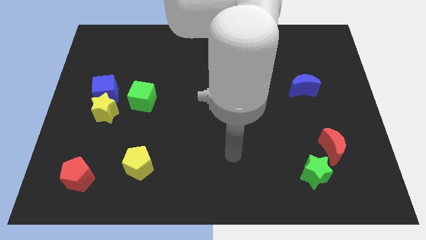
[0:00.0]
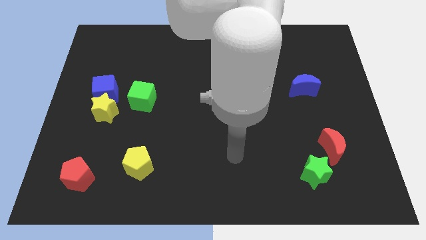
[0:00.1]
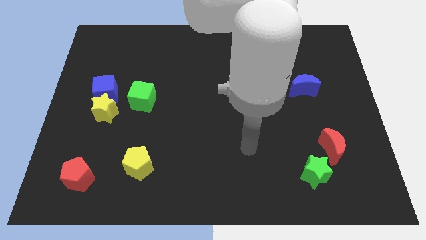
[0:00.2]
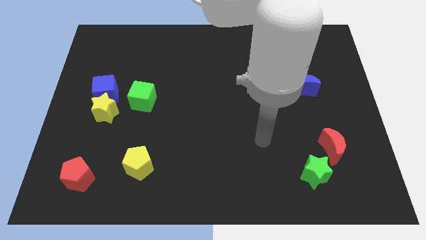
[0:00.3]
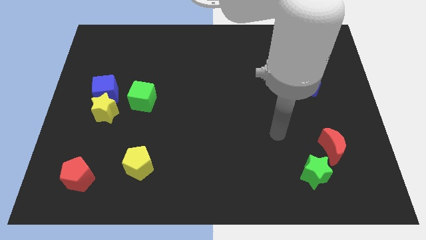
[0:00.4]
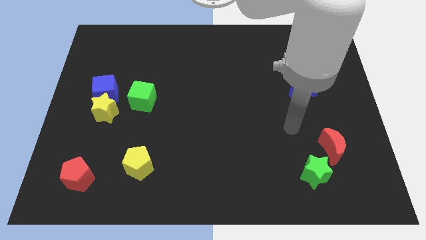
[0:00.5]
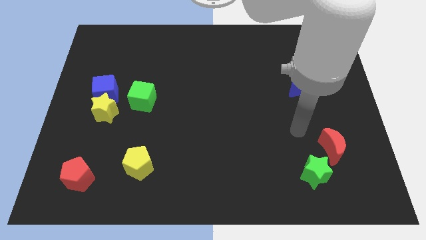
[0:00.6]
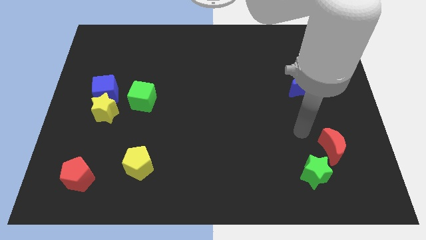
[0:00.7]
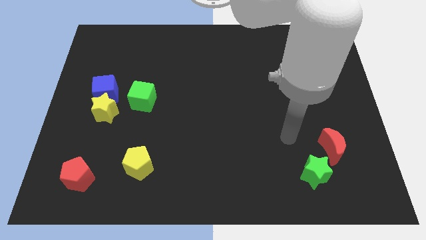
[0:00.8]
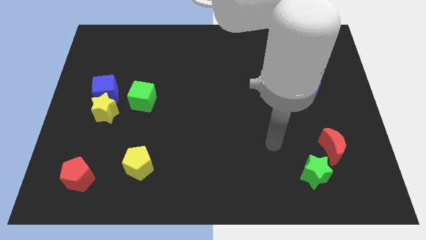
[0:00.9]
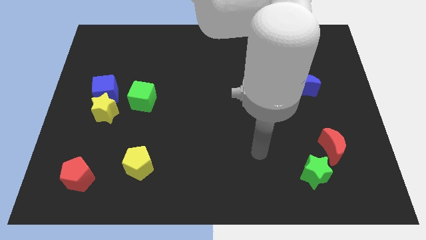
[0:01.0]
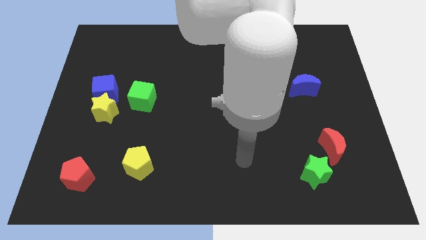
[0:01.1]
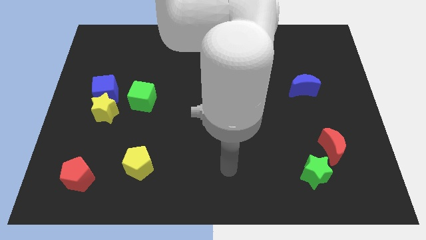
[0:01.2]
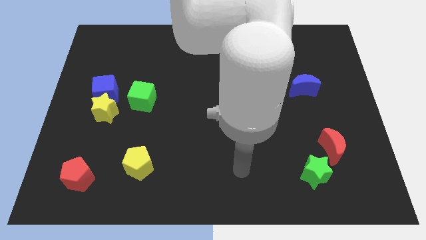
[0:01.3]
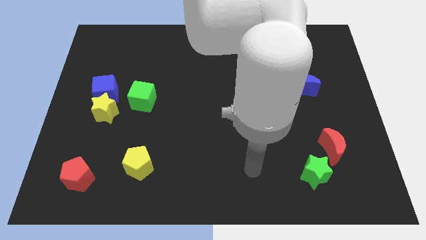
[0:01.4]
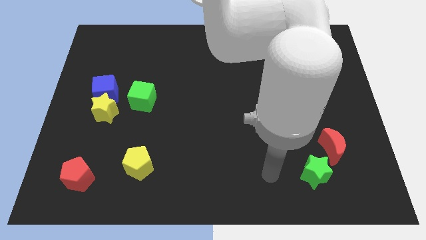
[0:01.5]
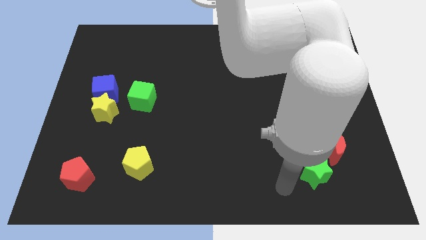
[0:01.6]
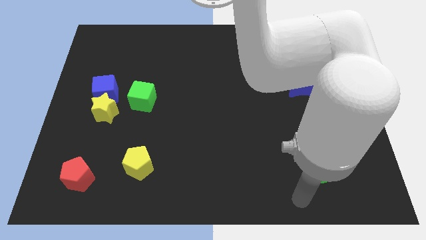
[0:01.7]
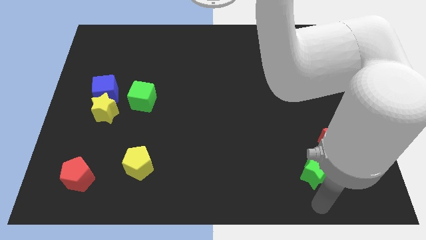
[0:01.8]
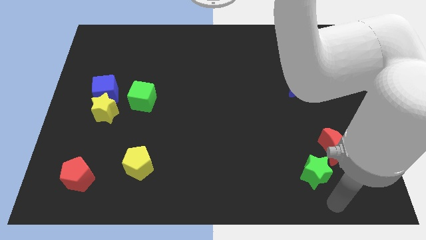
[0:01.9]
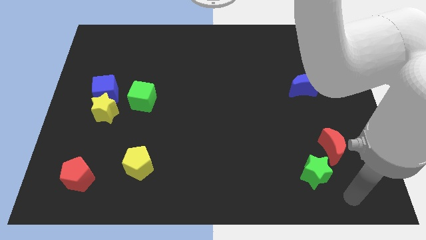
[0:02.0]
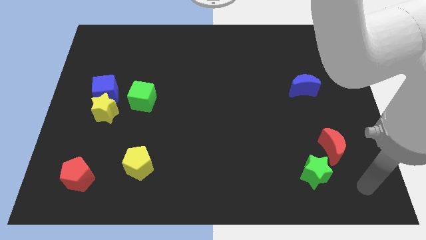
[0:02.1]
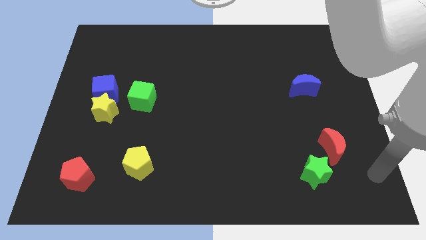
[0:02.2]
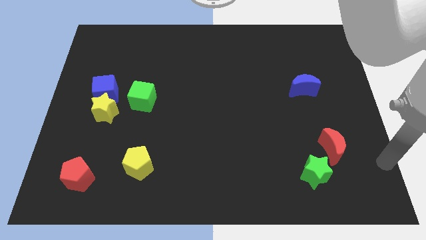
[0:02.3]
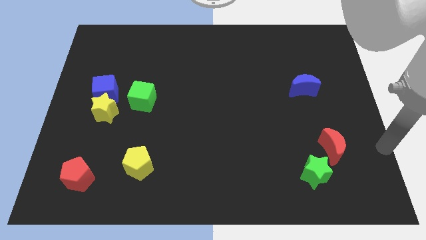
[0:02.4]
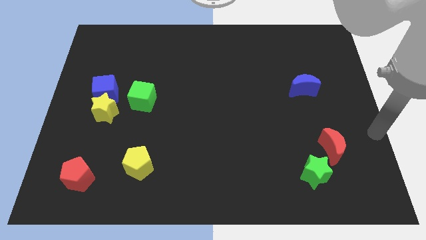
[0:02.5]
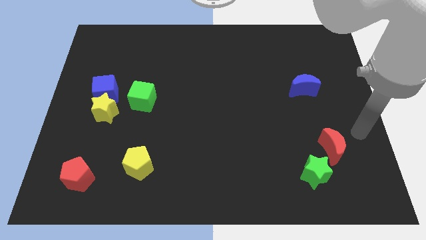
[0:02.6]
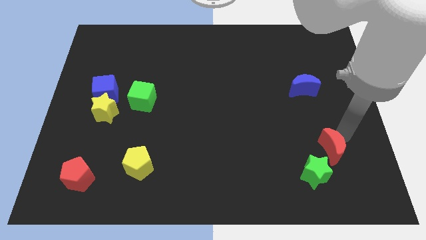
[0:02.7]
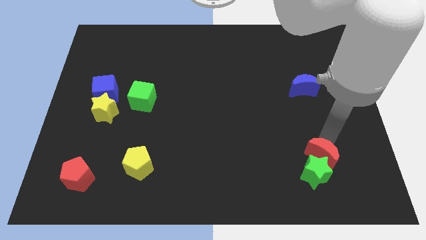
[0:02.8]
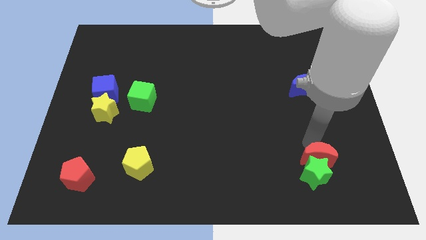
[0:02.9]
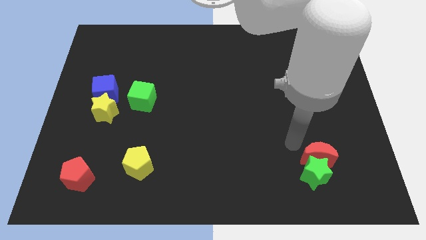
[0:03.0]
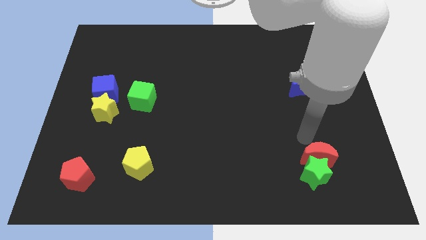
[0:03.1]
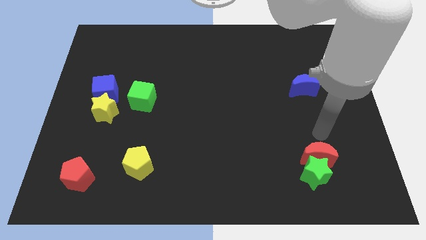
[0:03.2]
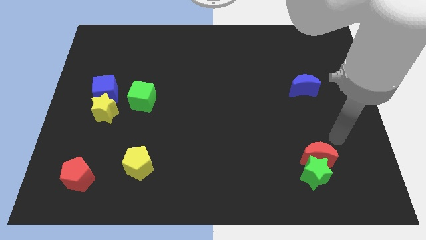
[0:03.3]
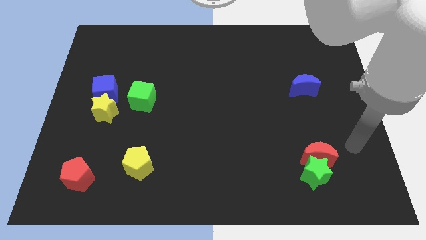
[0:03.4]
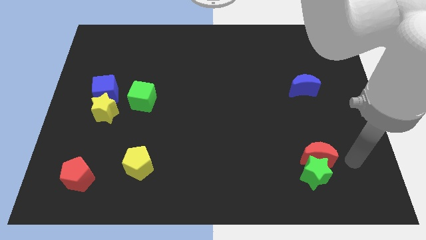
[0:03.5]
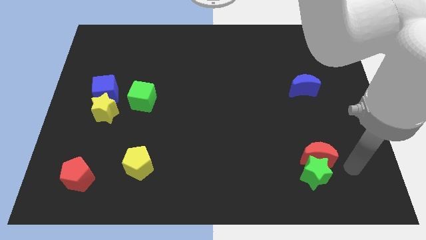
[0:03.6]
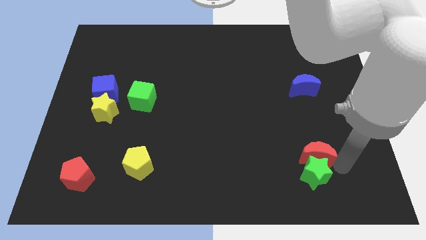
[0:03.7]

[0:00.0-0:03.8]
push the red crescent close to the green star

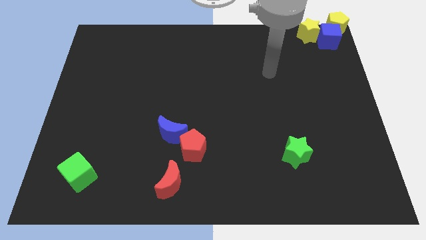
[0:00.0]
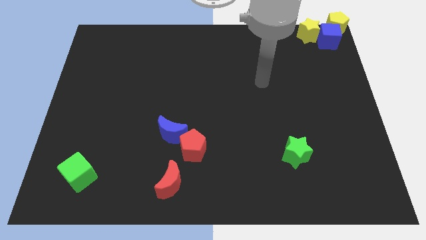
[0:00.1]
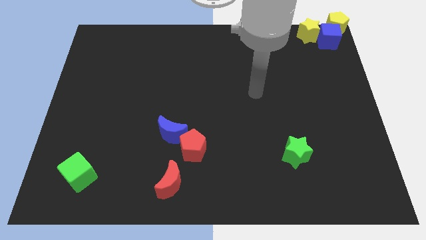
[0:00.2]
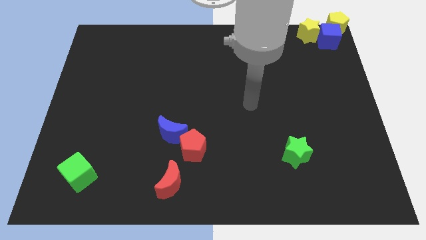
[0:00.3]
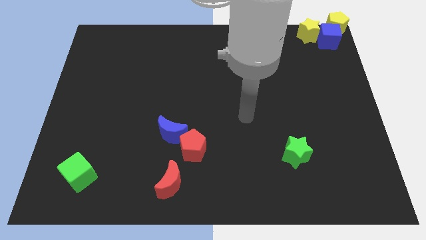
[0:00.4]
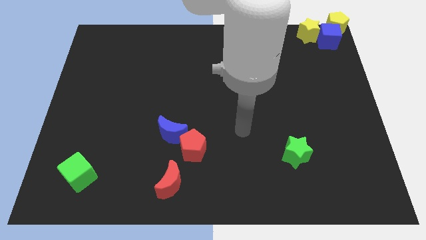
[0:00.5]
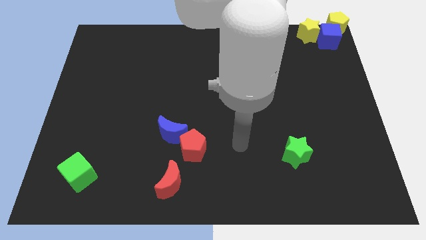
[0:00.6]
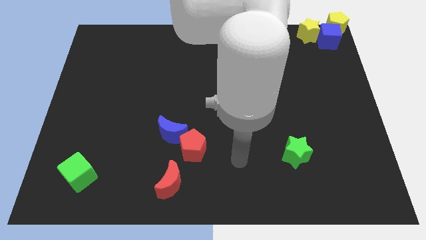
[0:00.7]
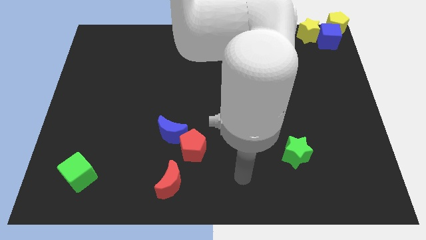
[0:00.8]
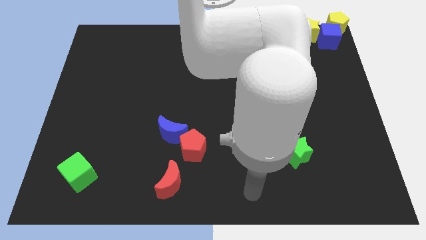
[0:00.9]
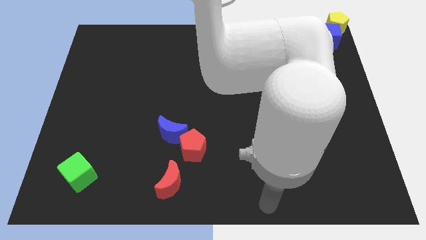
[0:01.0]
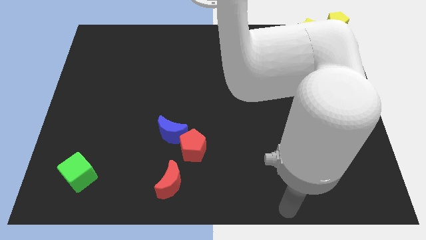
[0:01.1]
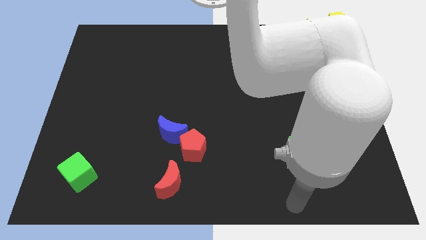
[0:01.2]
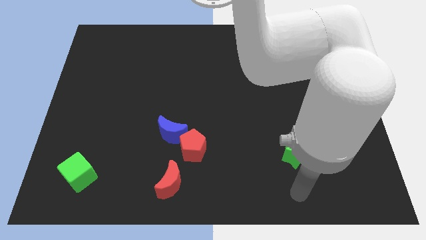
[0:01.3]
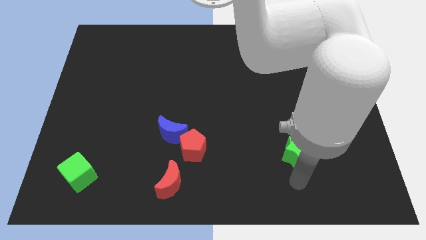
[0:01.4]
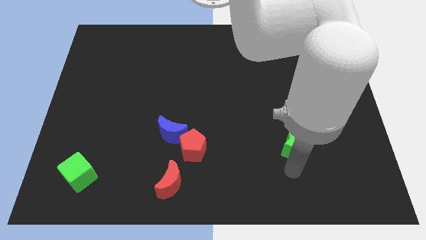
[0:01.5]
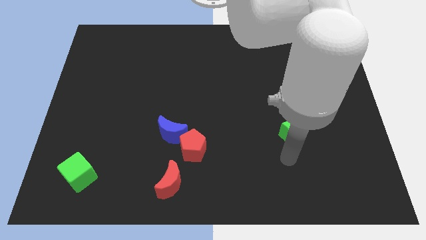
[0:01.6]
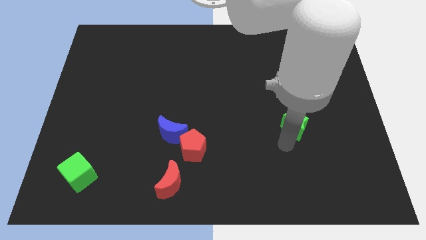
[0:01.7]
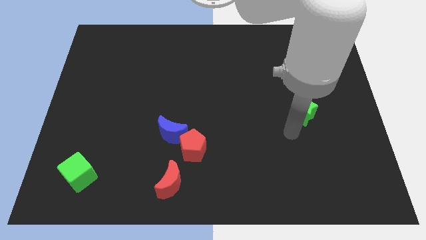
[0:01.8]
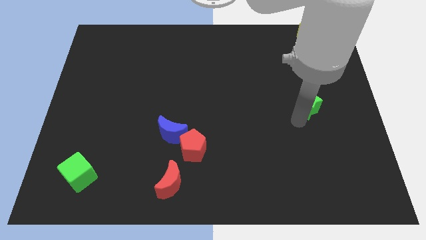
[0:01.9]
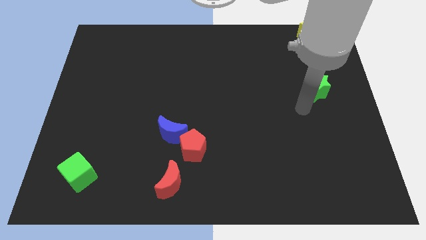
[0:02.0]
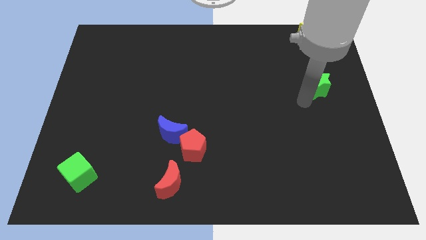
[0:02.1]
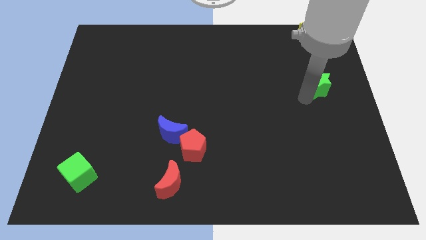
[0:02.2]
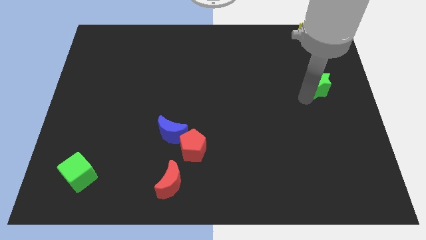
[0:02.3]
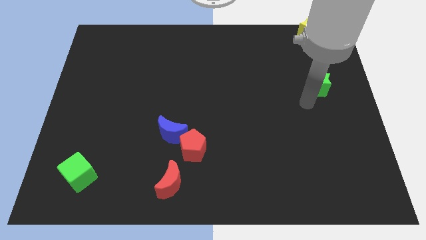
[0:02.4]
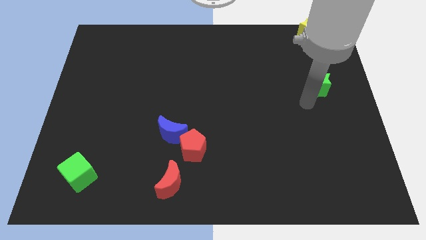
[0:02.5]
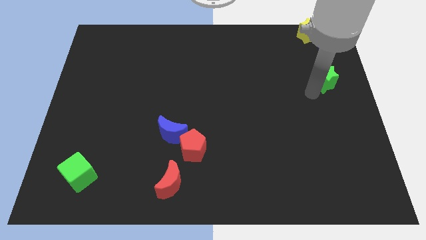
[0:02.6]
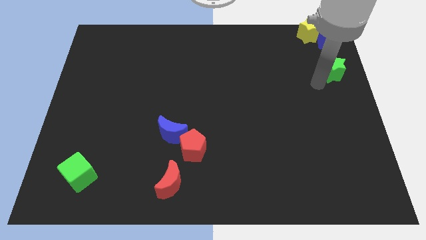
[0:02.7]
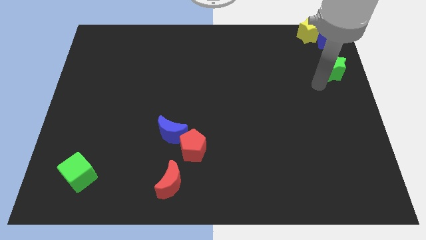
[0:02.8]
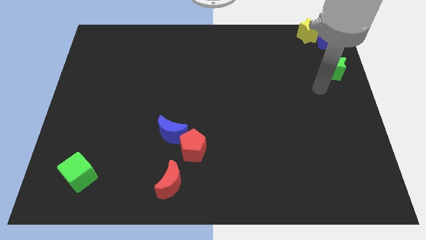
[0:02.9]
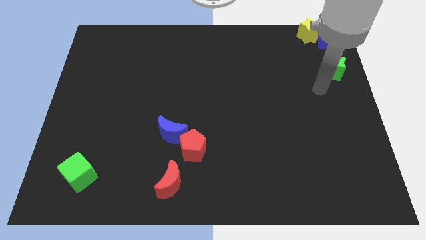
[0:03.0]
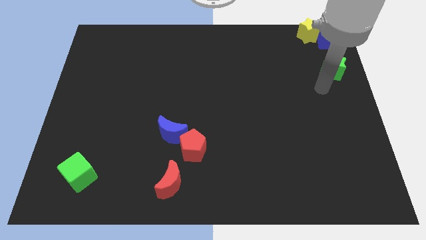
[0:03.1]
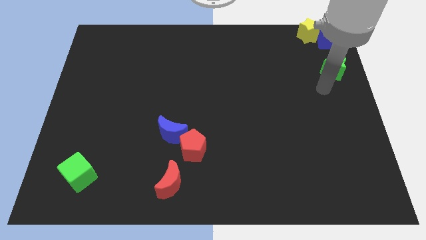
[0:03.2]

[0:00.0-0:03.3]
place green star vertically below blue cube

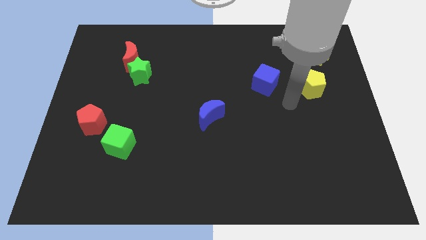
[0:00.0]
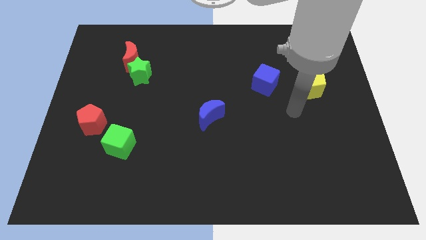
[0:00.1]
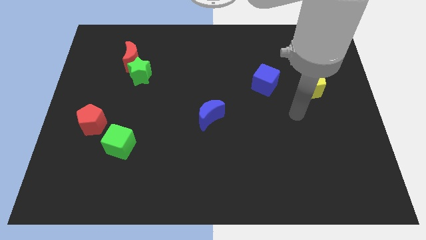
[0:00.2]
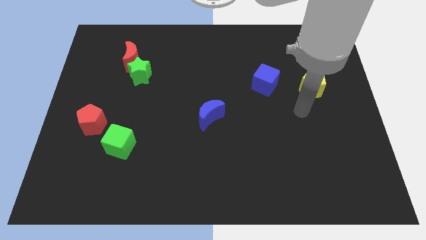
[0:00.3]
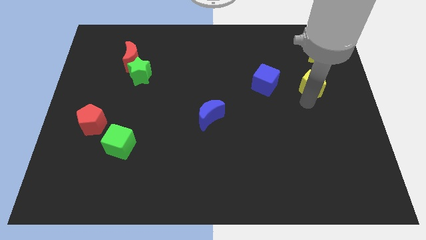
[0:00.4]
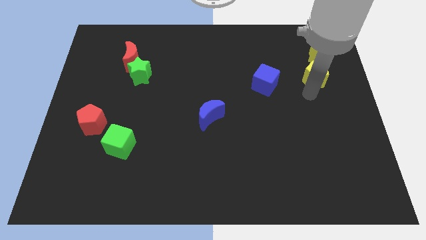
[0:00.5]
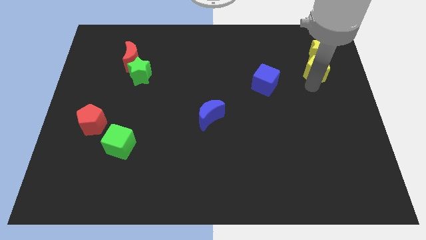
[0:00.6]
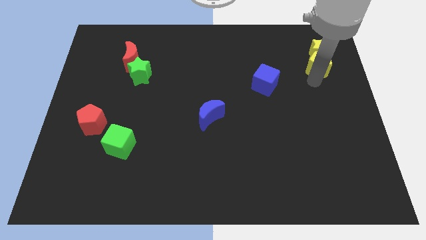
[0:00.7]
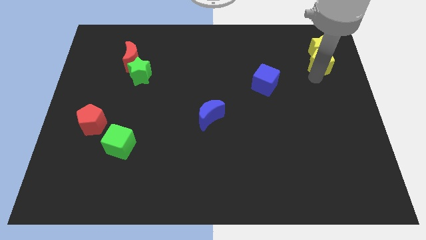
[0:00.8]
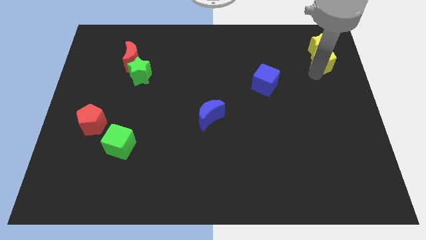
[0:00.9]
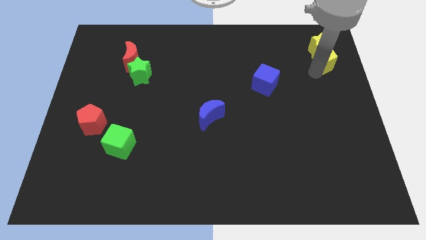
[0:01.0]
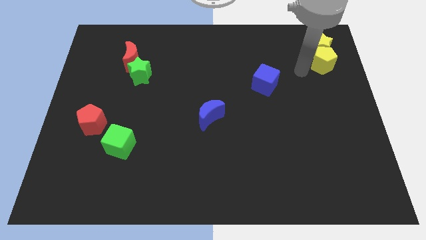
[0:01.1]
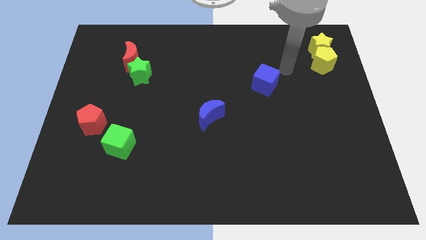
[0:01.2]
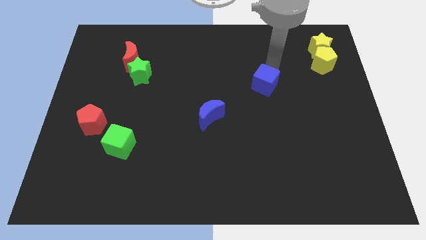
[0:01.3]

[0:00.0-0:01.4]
push yellow pentagon to the top right corner of the board

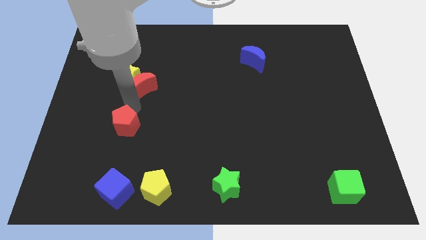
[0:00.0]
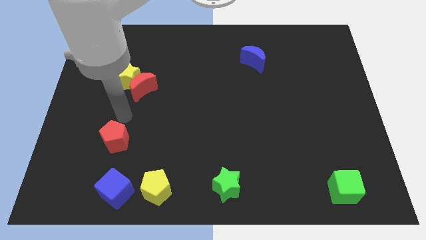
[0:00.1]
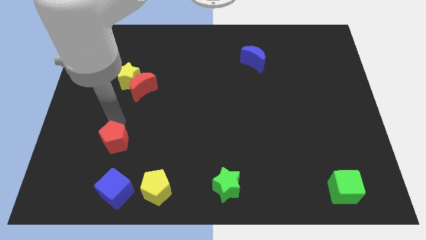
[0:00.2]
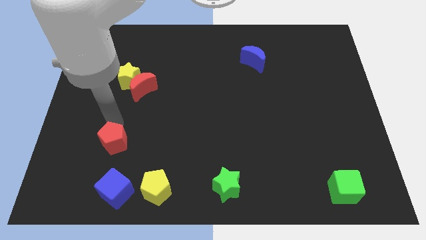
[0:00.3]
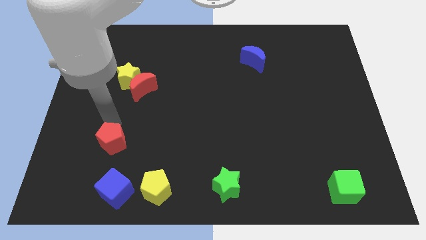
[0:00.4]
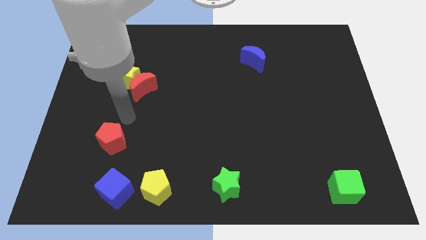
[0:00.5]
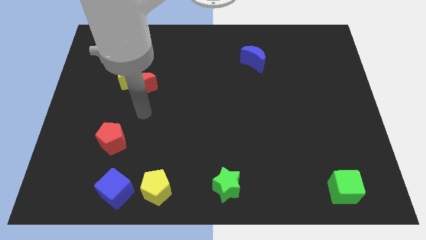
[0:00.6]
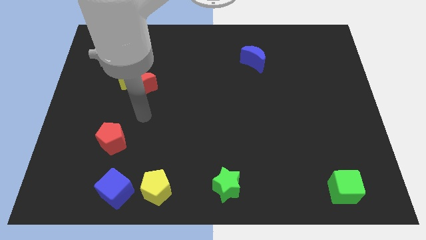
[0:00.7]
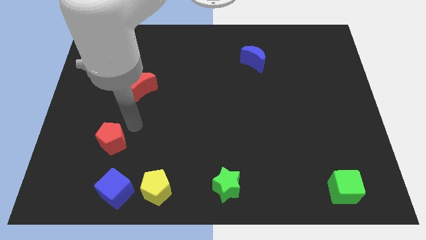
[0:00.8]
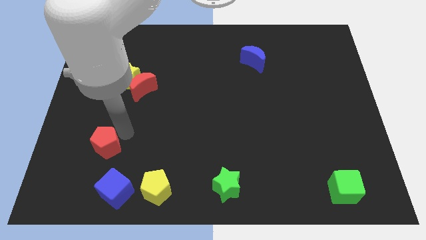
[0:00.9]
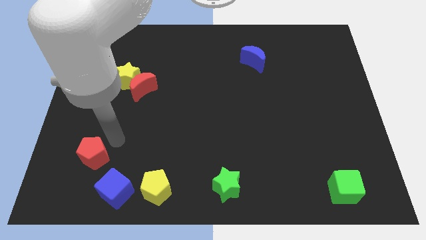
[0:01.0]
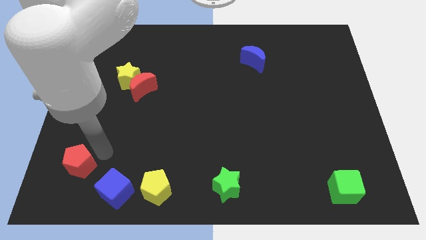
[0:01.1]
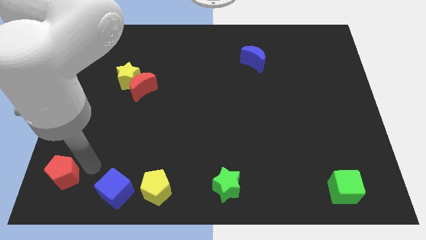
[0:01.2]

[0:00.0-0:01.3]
push red pentagon beside blue cube
